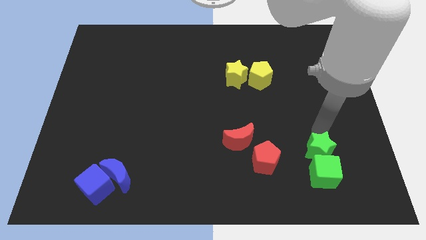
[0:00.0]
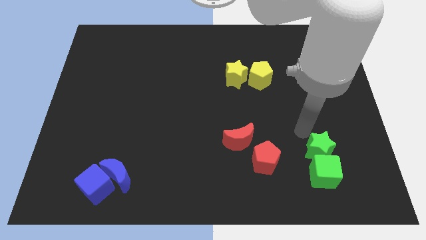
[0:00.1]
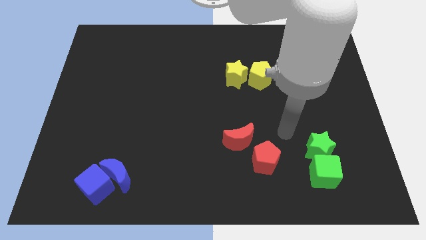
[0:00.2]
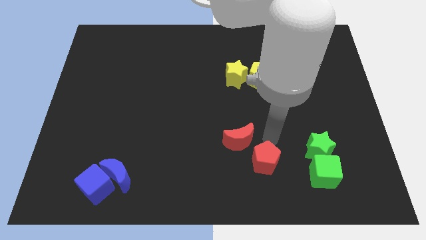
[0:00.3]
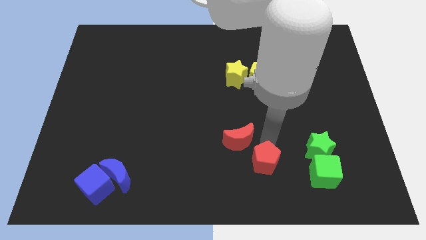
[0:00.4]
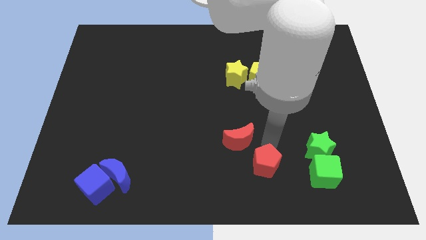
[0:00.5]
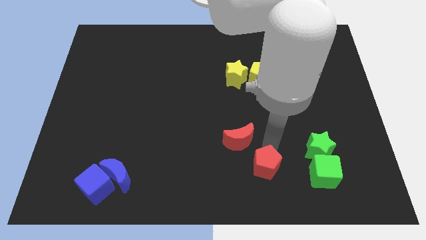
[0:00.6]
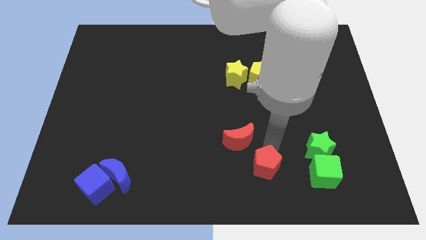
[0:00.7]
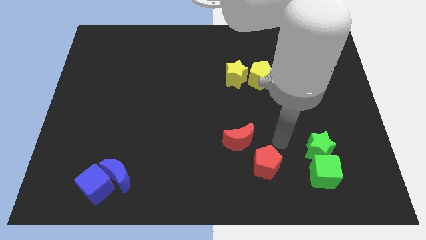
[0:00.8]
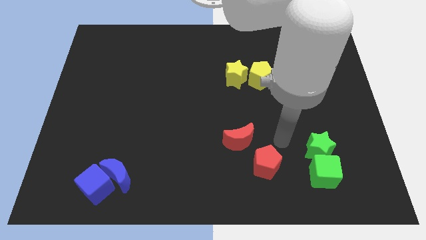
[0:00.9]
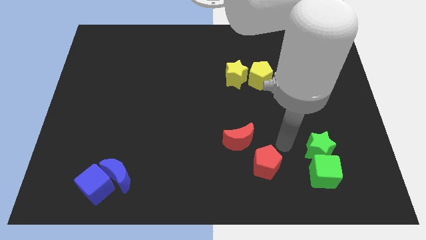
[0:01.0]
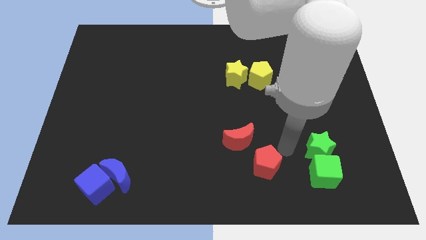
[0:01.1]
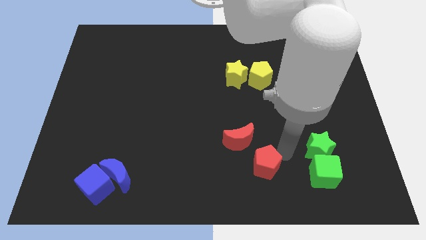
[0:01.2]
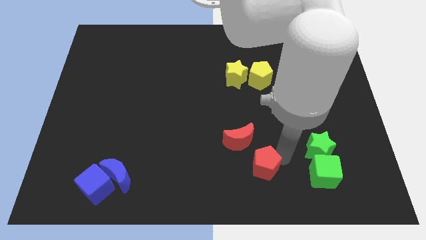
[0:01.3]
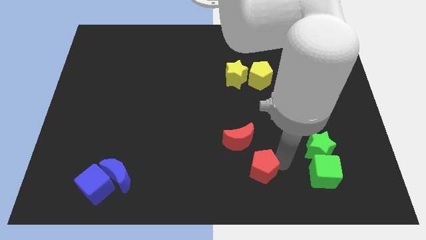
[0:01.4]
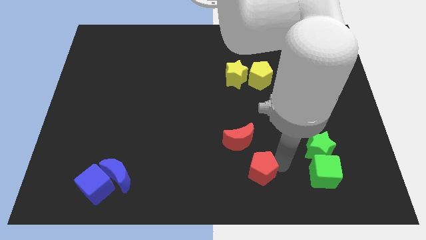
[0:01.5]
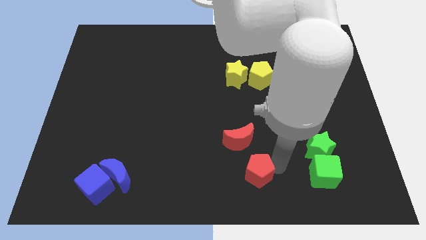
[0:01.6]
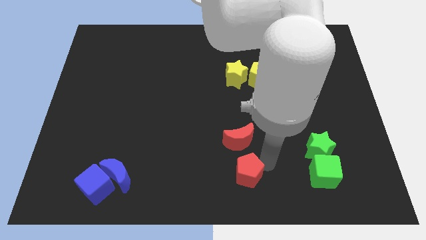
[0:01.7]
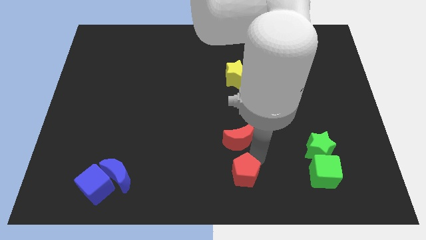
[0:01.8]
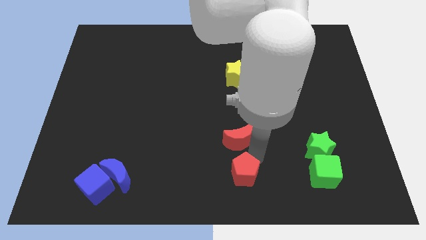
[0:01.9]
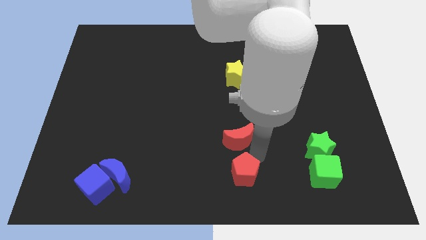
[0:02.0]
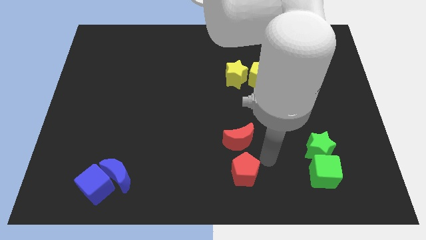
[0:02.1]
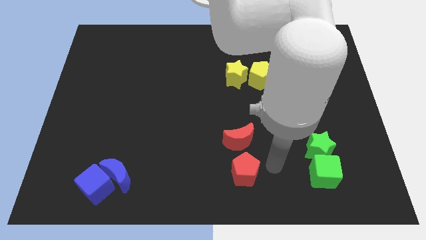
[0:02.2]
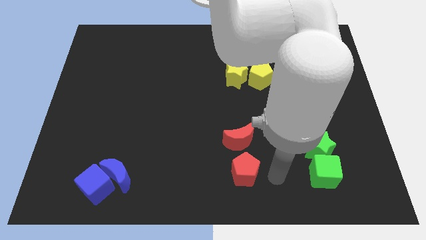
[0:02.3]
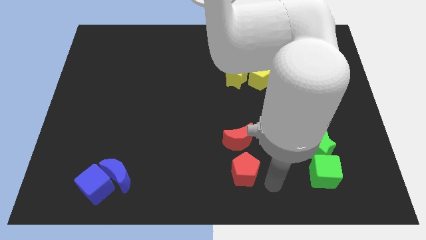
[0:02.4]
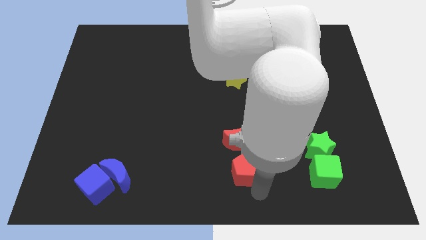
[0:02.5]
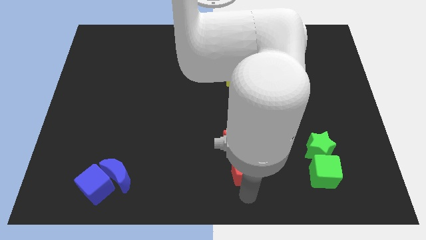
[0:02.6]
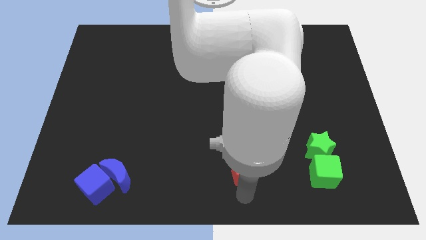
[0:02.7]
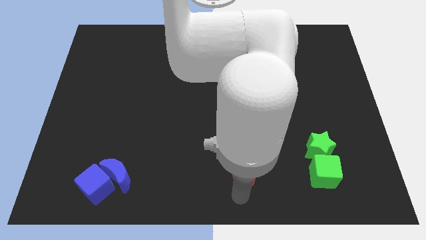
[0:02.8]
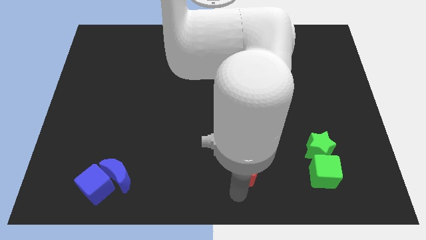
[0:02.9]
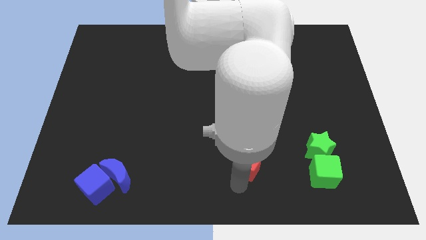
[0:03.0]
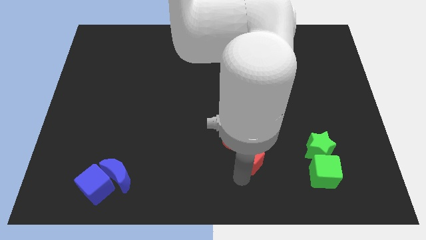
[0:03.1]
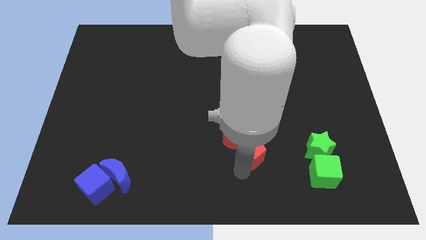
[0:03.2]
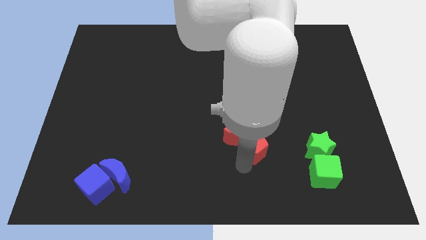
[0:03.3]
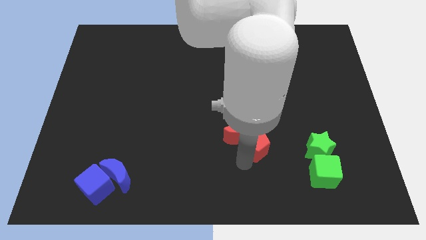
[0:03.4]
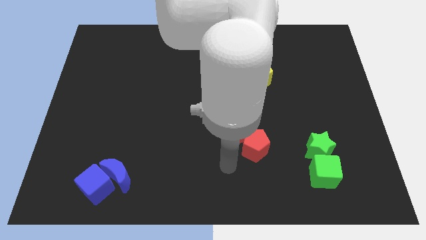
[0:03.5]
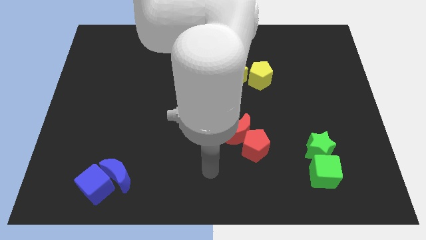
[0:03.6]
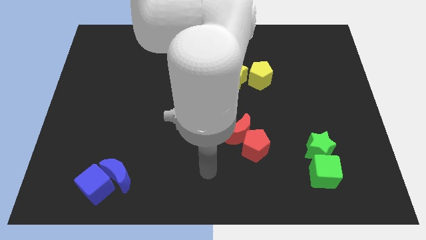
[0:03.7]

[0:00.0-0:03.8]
move the red pentagon into the right side of the red crescent

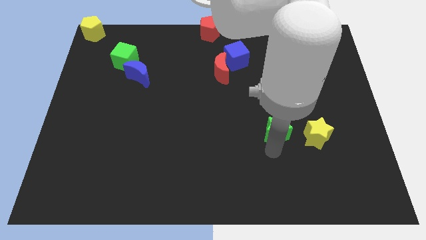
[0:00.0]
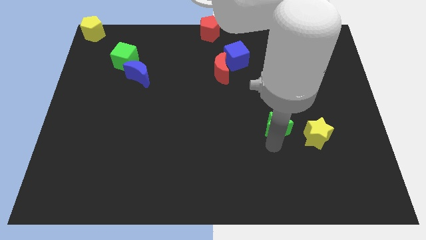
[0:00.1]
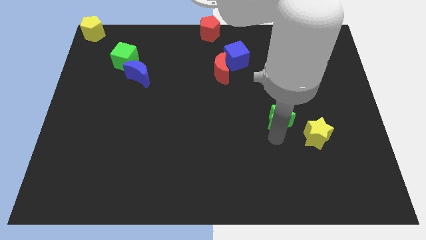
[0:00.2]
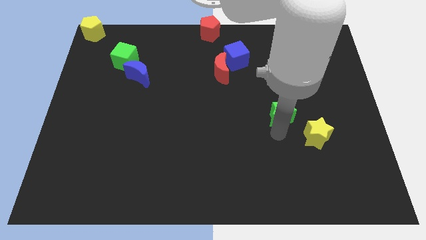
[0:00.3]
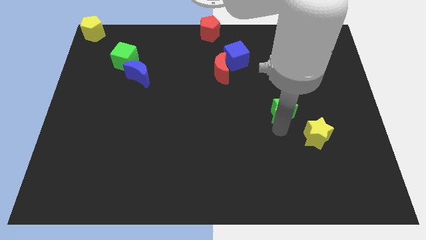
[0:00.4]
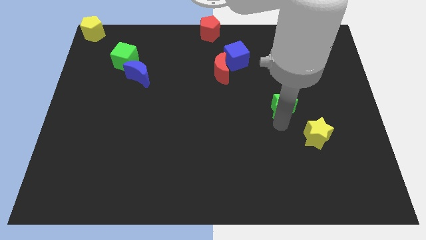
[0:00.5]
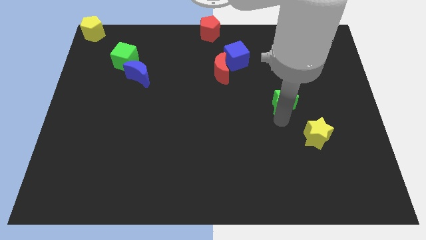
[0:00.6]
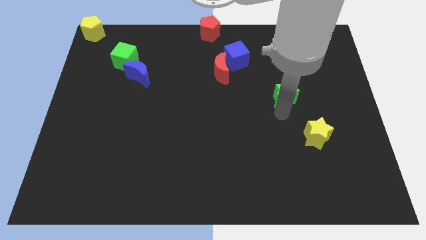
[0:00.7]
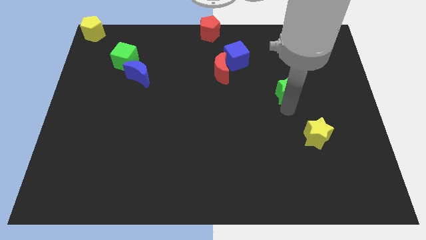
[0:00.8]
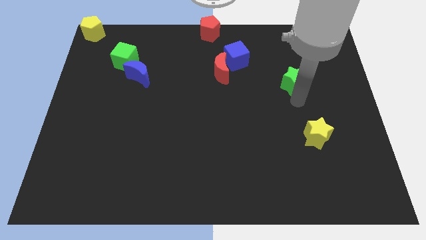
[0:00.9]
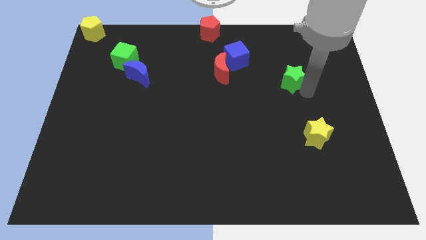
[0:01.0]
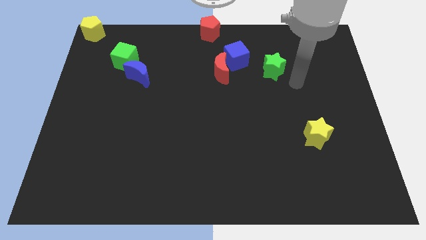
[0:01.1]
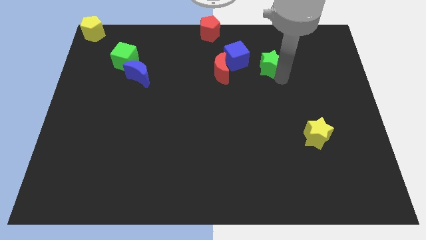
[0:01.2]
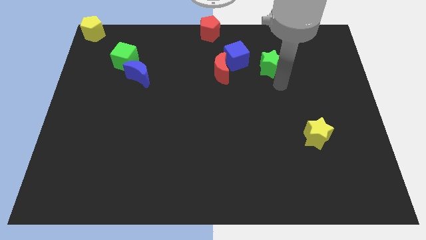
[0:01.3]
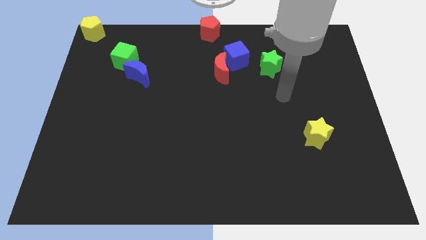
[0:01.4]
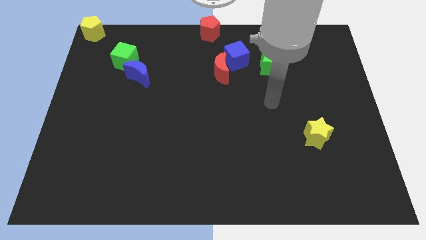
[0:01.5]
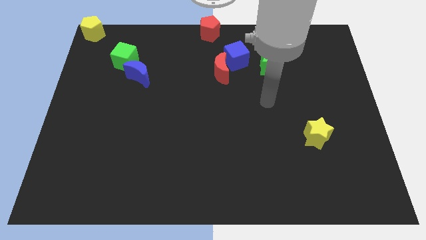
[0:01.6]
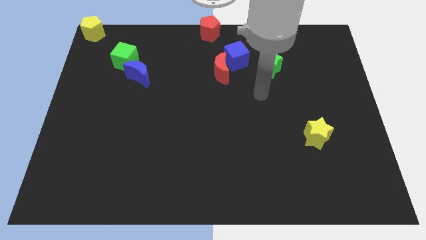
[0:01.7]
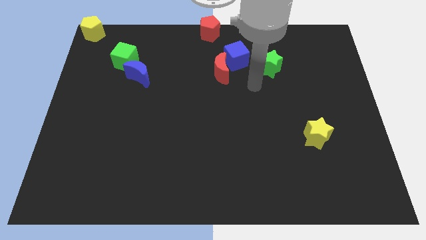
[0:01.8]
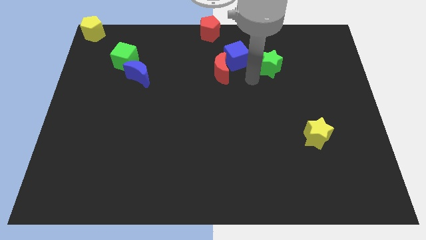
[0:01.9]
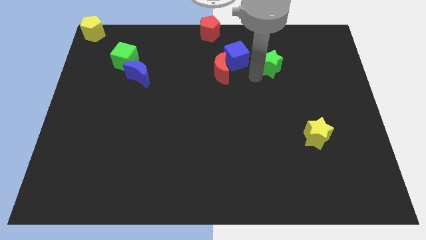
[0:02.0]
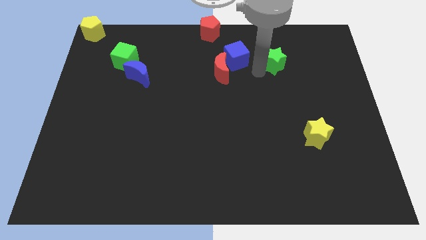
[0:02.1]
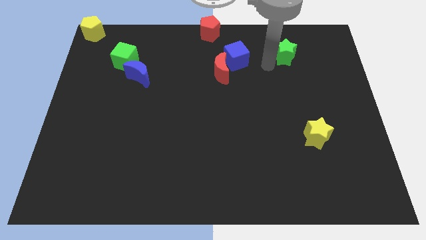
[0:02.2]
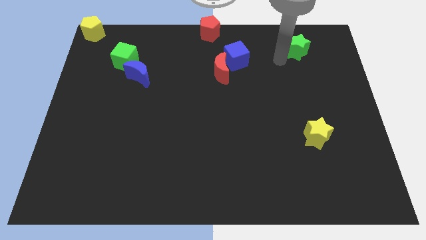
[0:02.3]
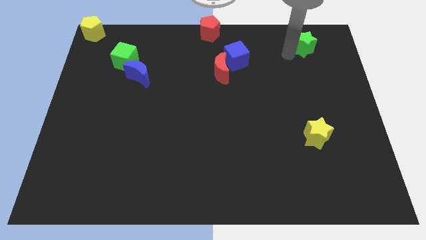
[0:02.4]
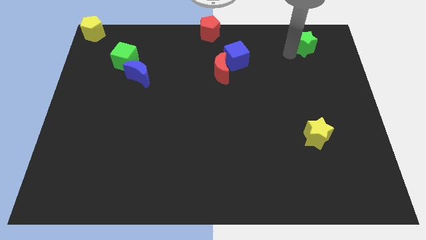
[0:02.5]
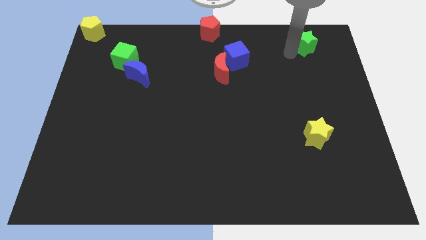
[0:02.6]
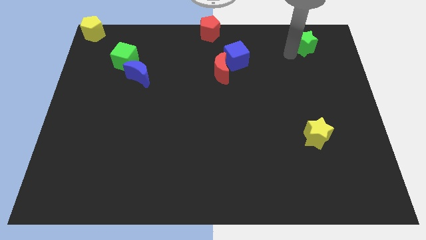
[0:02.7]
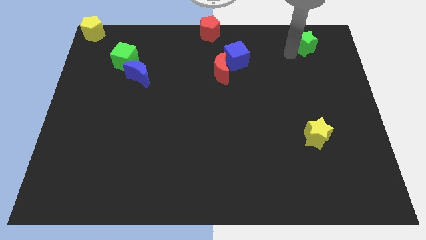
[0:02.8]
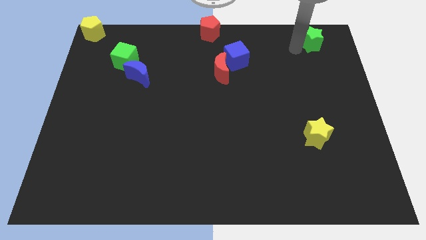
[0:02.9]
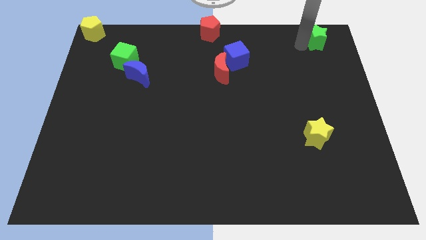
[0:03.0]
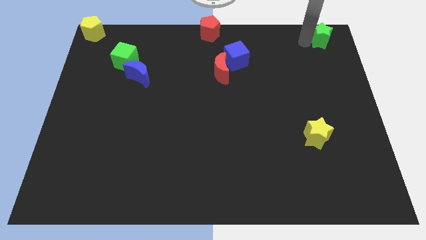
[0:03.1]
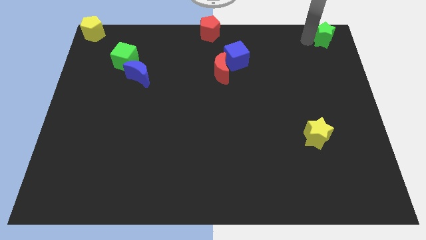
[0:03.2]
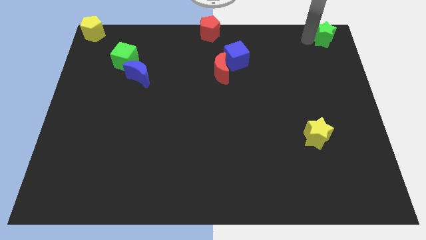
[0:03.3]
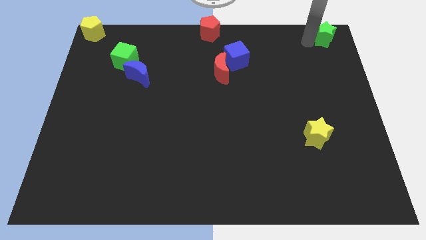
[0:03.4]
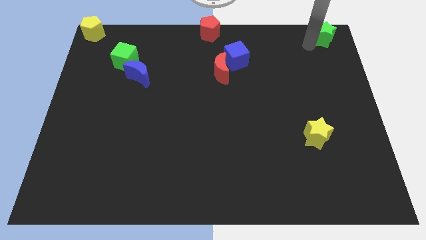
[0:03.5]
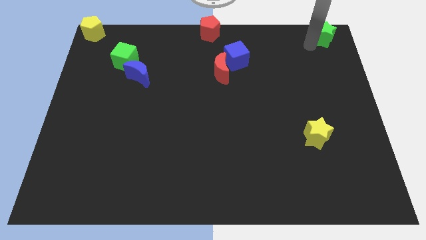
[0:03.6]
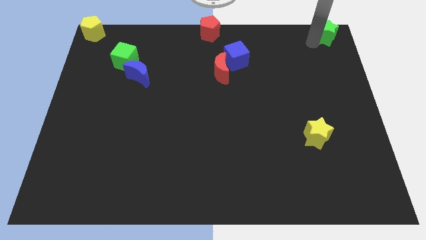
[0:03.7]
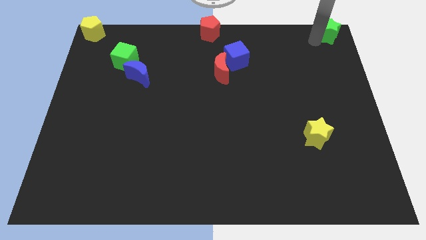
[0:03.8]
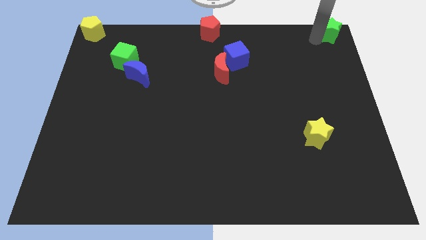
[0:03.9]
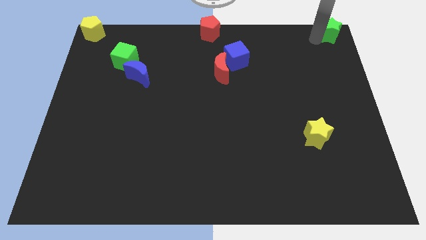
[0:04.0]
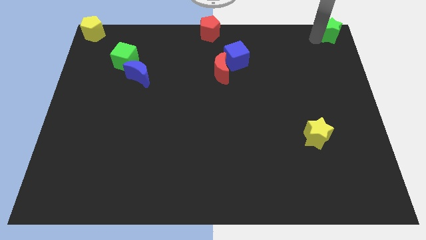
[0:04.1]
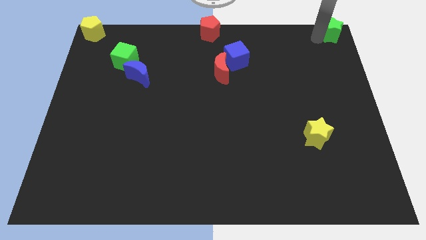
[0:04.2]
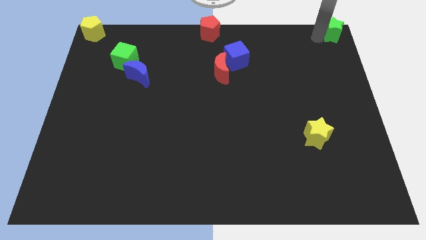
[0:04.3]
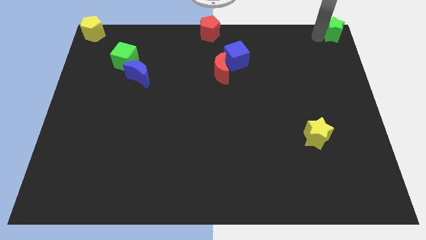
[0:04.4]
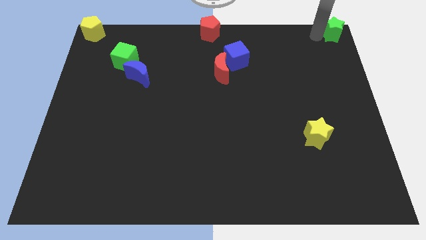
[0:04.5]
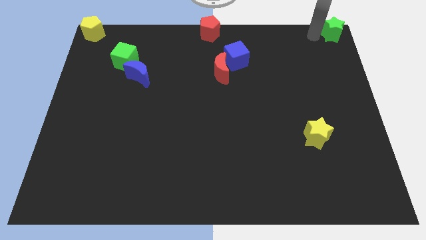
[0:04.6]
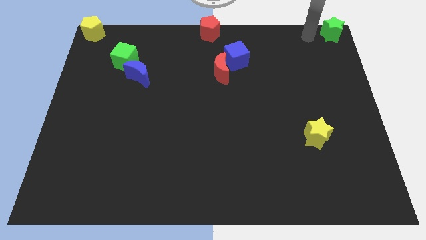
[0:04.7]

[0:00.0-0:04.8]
place the green star at the top left side of the board

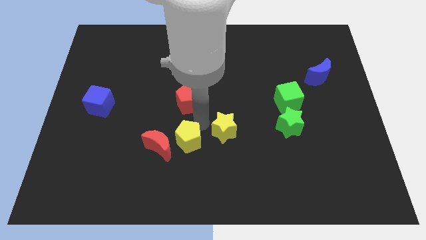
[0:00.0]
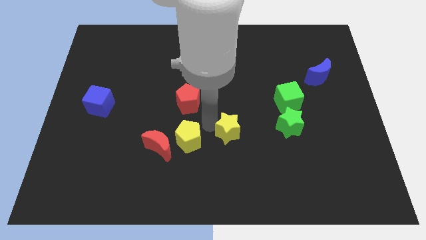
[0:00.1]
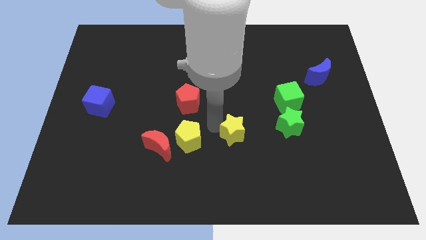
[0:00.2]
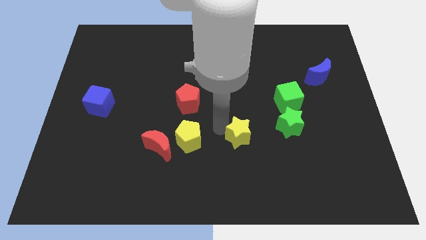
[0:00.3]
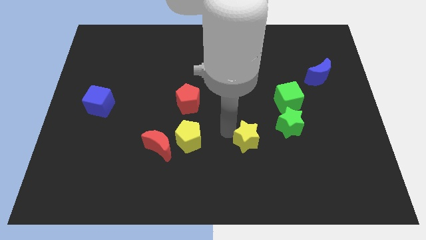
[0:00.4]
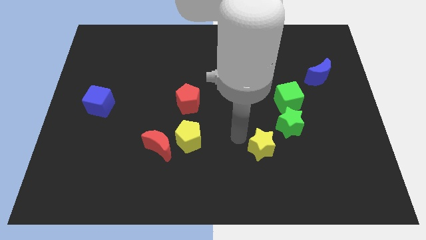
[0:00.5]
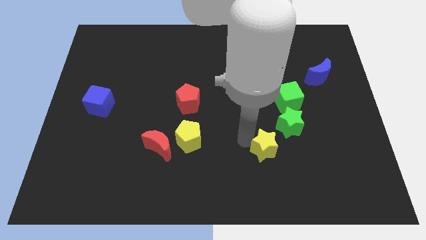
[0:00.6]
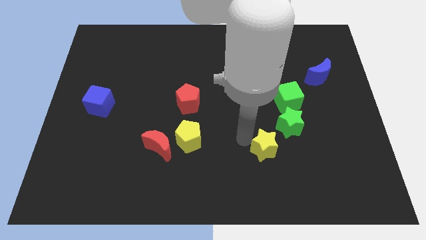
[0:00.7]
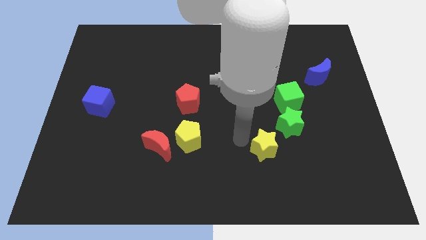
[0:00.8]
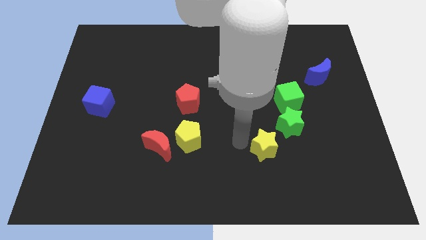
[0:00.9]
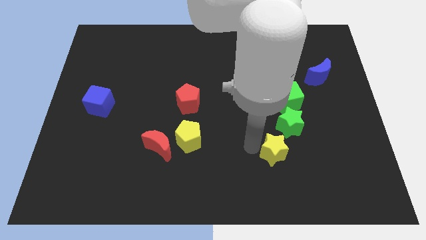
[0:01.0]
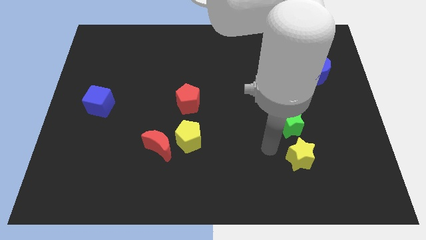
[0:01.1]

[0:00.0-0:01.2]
move yellow star away from the red pentagon
